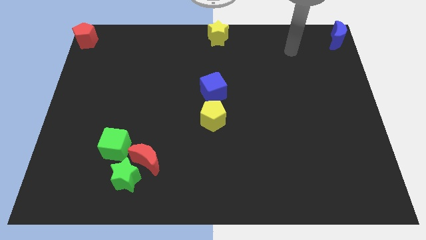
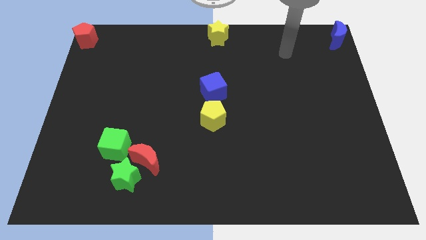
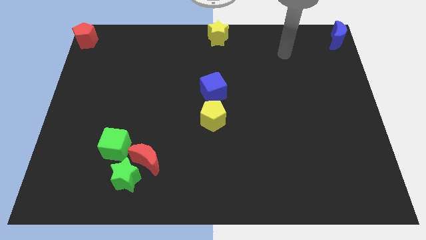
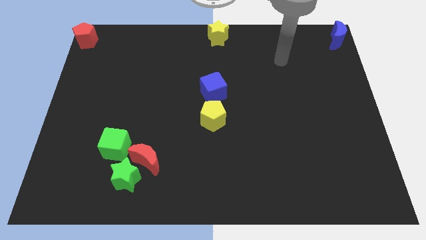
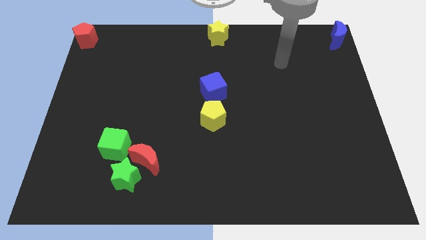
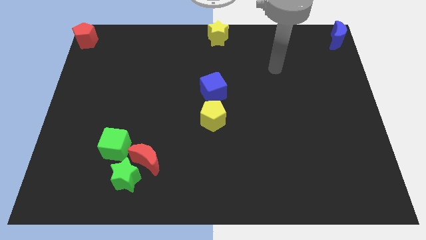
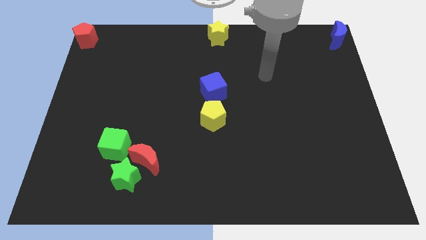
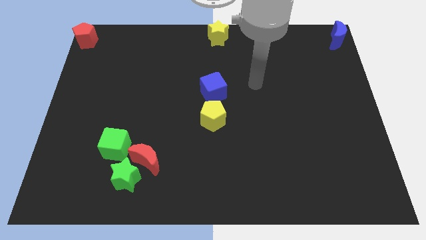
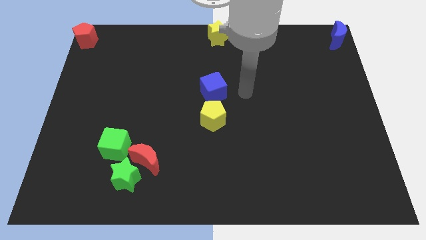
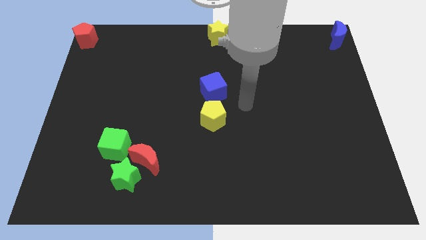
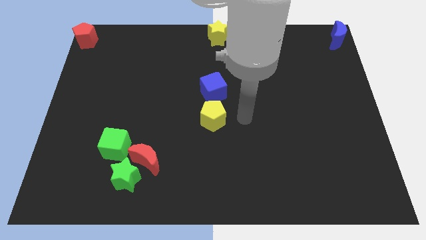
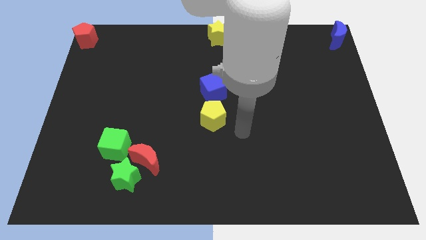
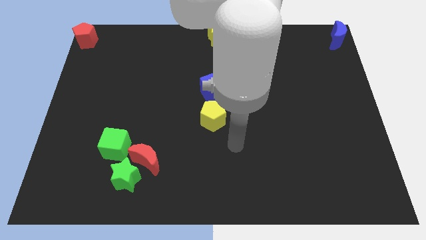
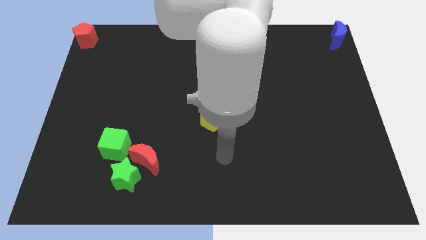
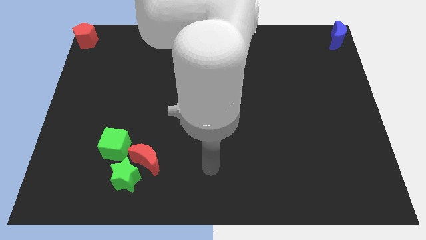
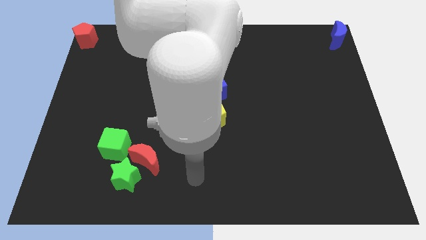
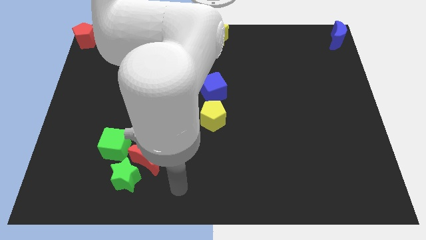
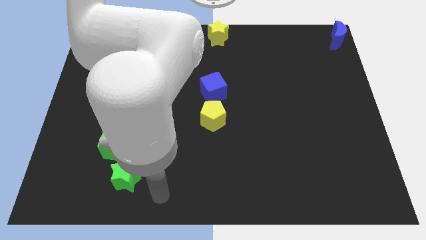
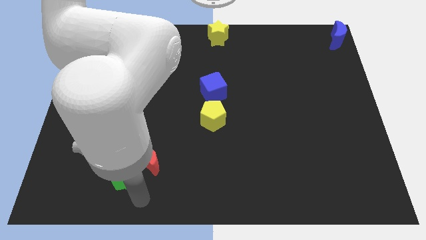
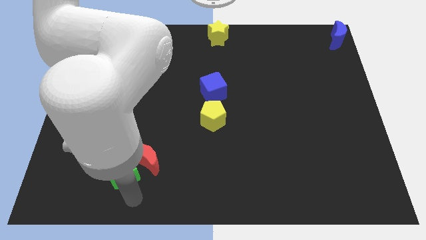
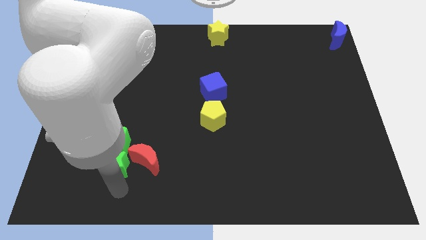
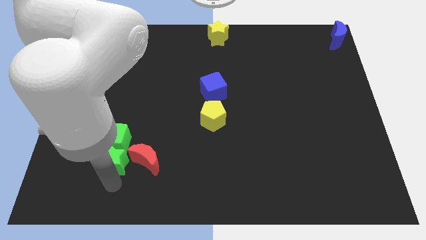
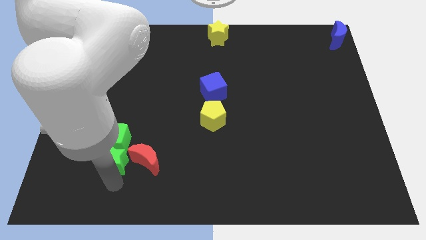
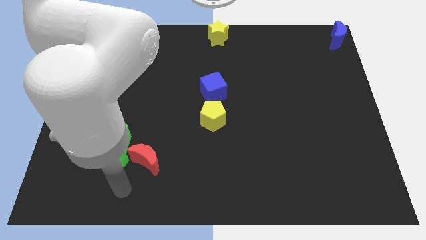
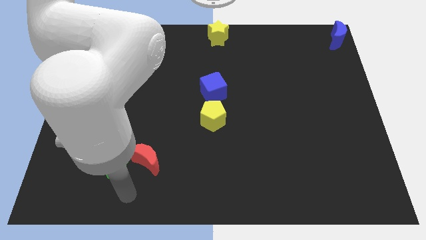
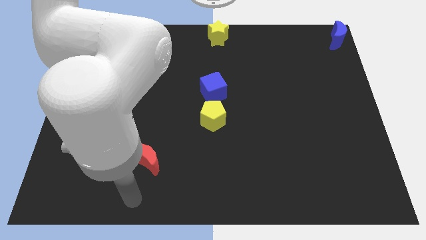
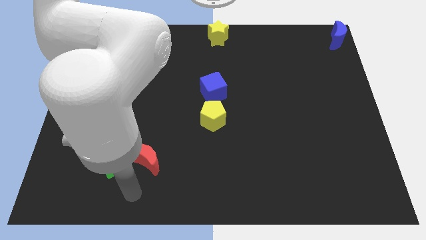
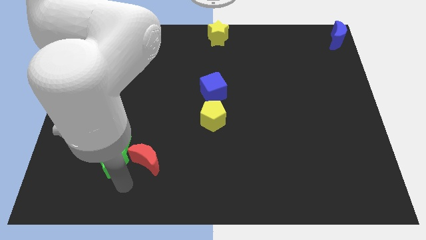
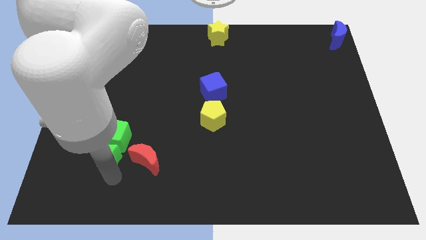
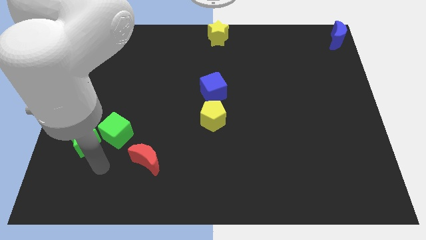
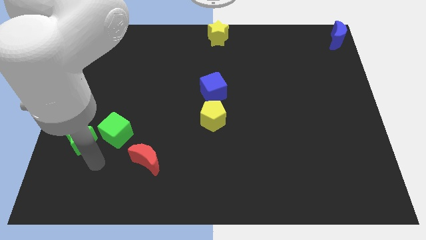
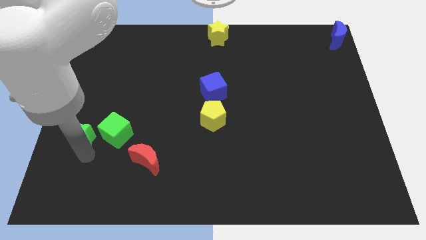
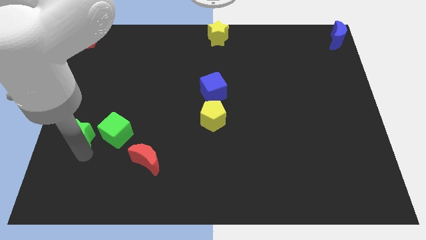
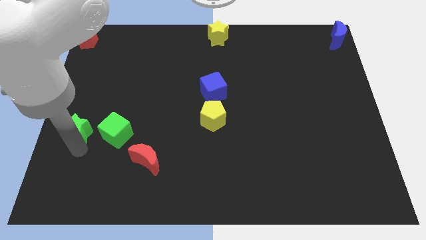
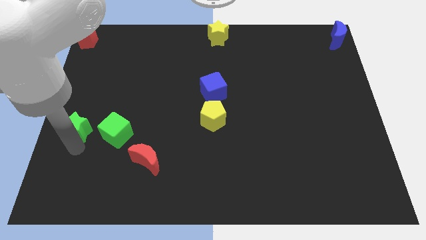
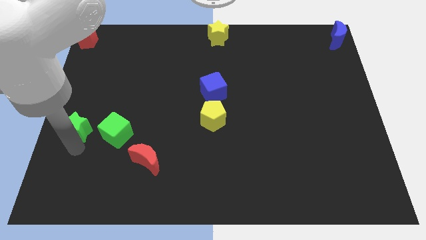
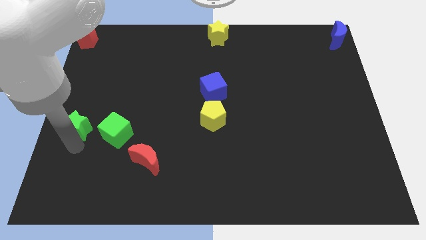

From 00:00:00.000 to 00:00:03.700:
place the green blocks in a horizontal line

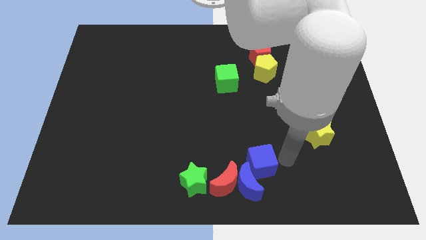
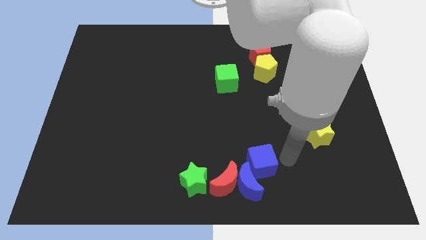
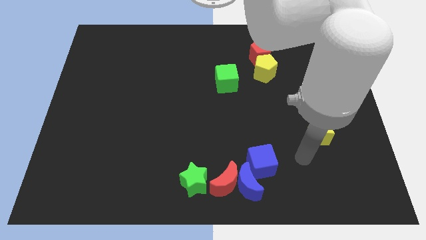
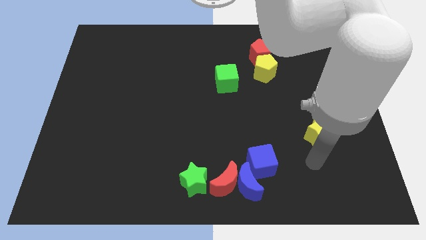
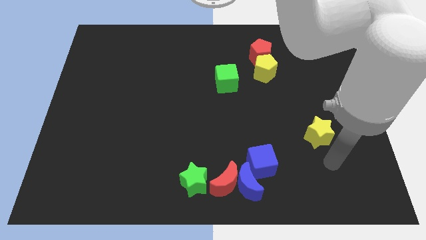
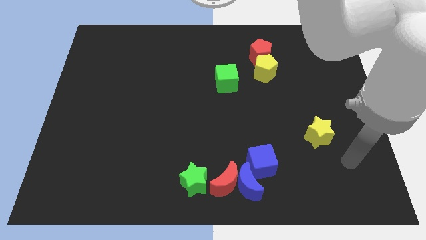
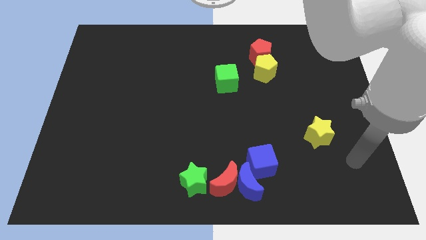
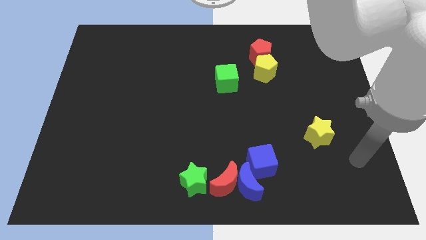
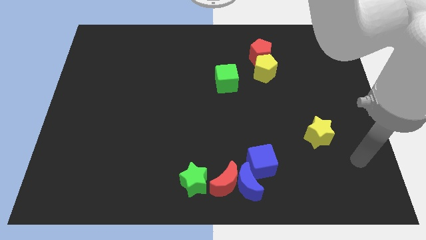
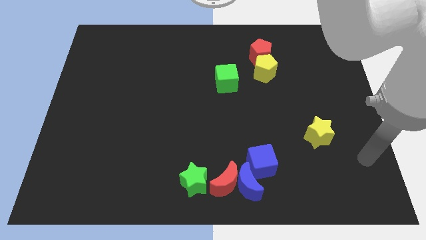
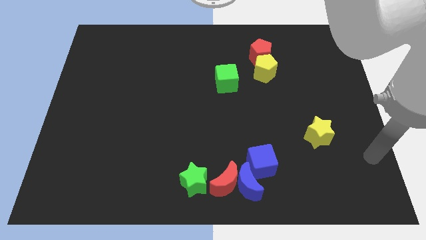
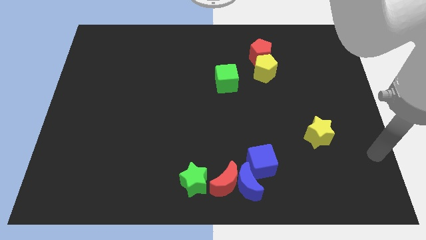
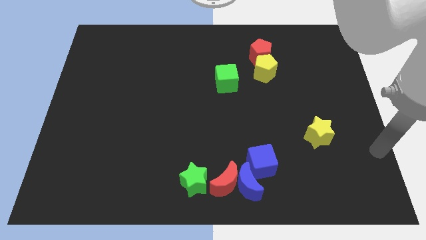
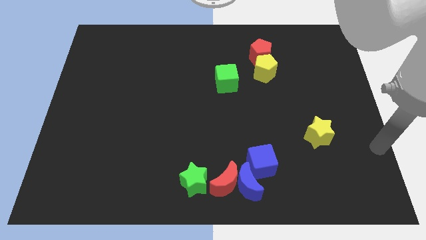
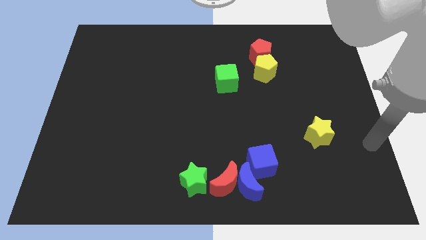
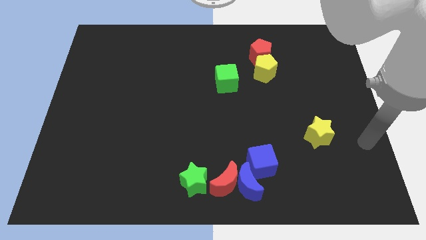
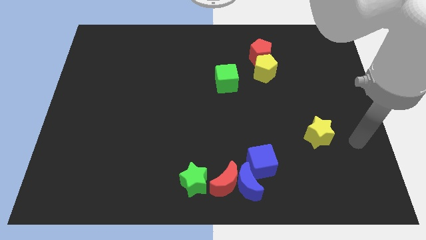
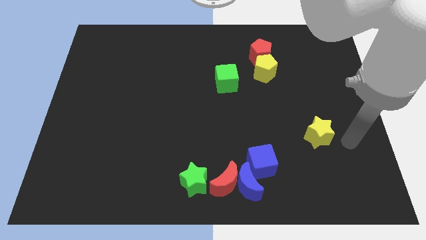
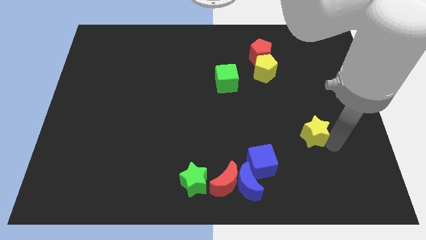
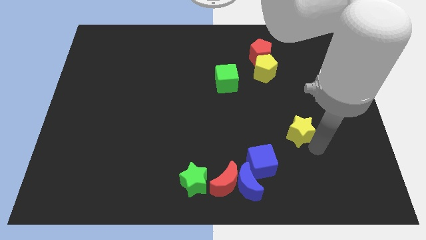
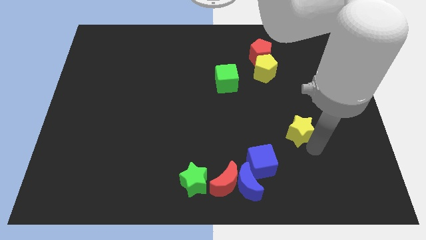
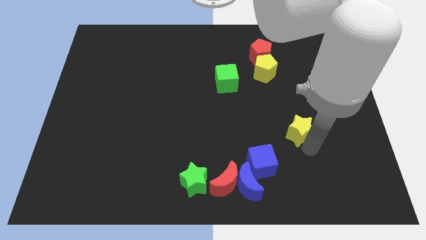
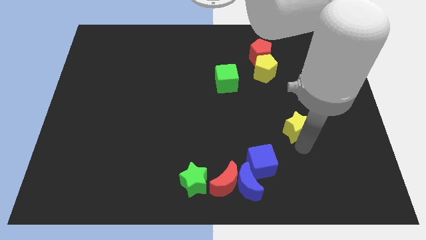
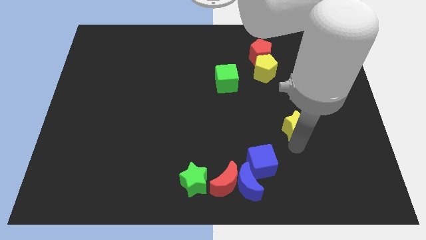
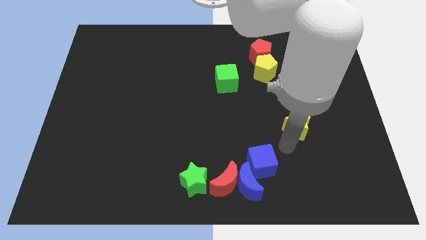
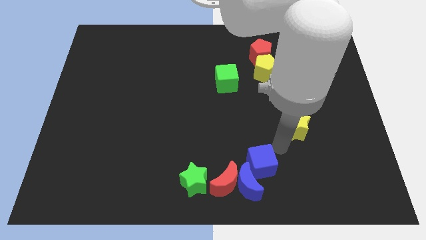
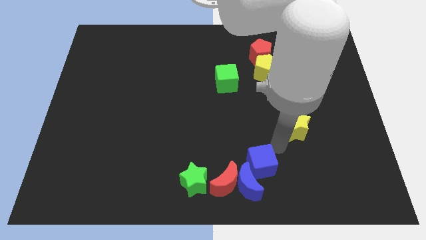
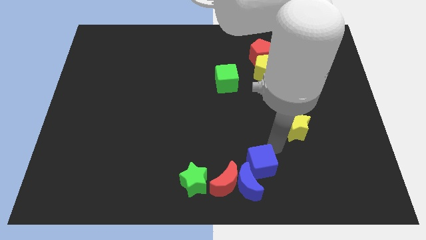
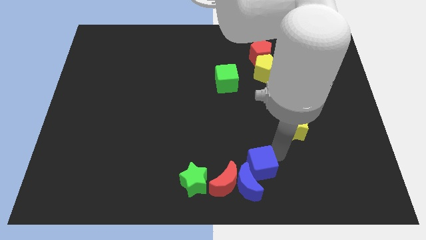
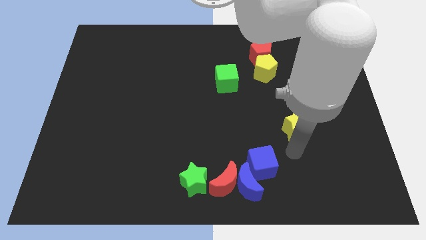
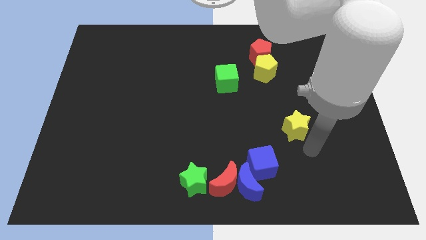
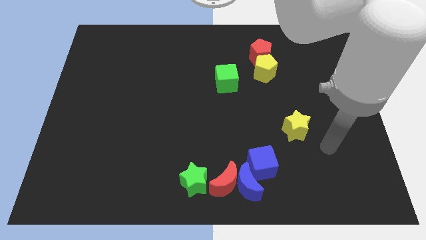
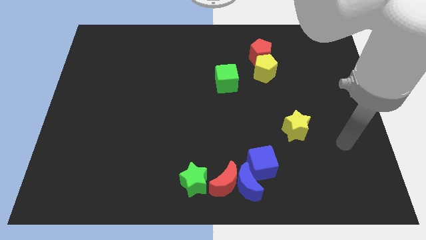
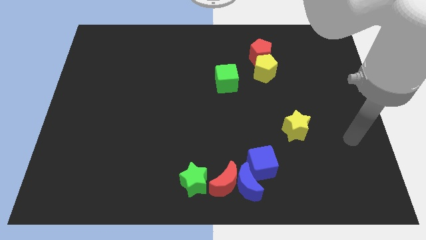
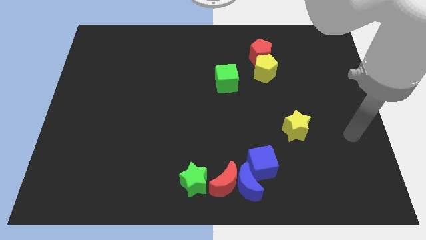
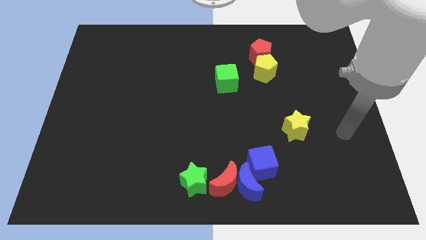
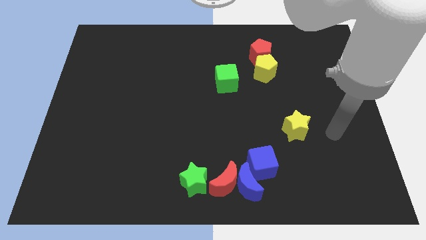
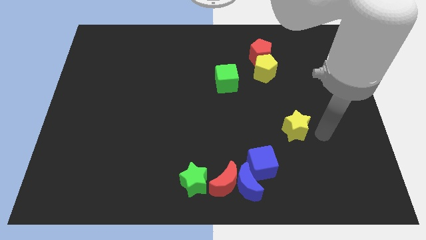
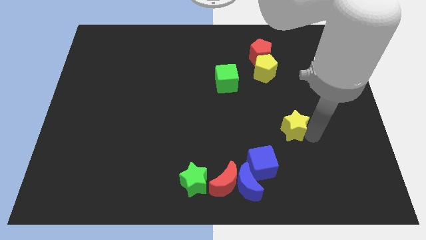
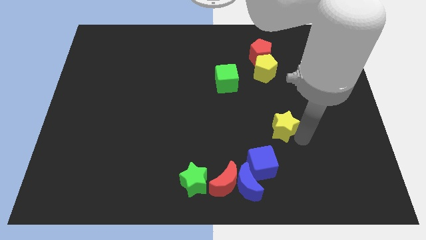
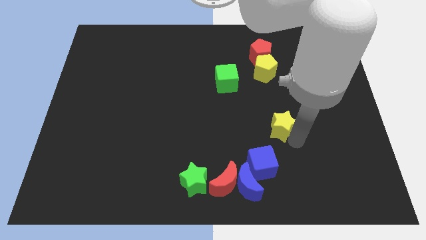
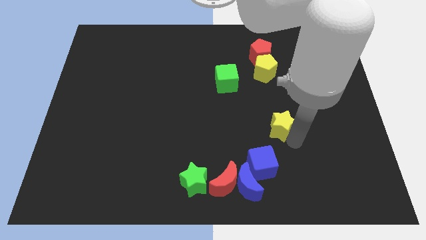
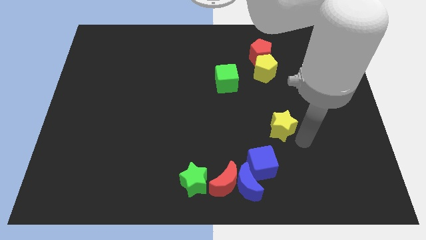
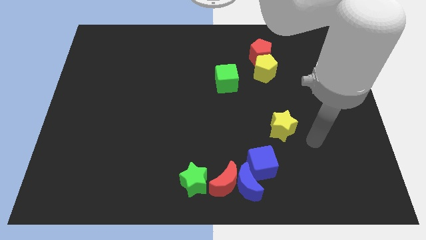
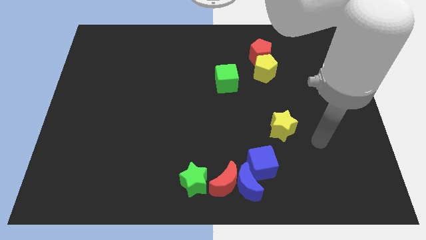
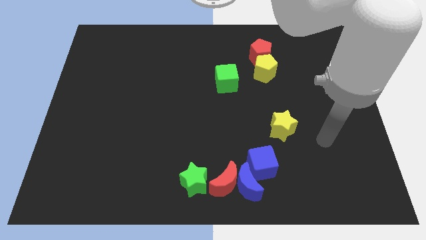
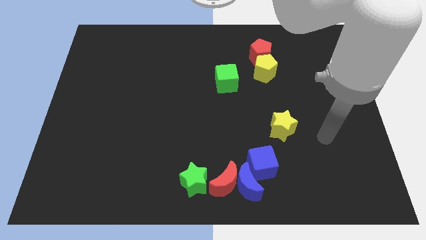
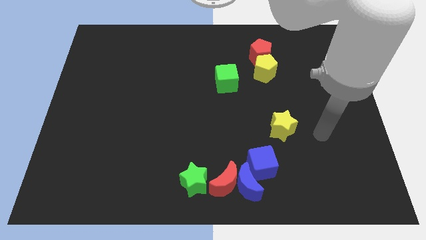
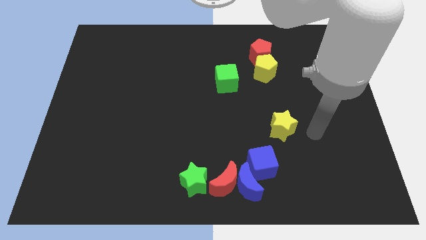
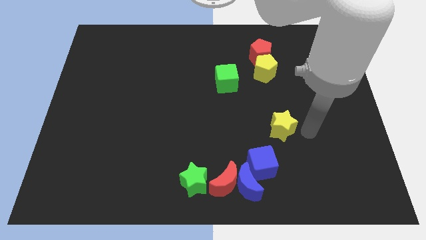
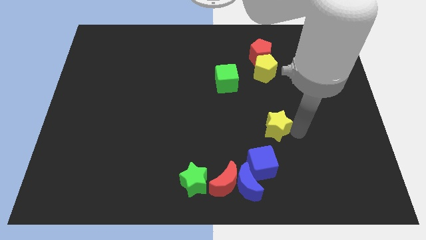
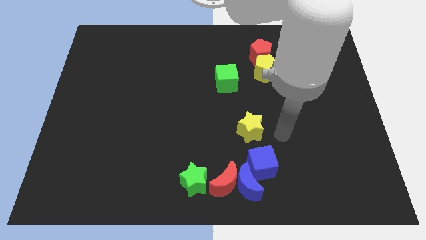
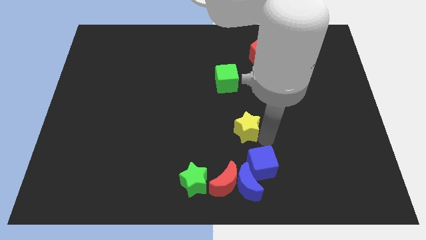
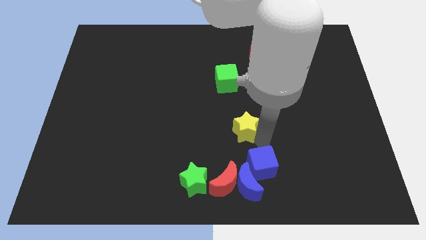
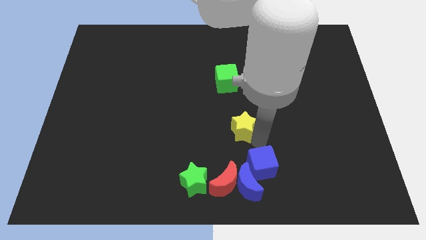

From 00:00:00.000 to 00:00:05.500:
move the yellow star slightly left
